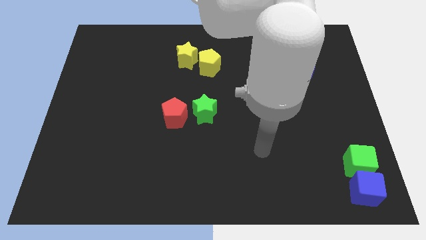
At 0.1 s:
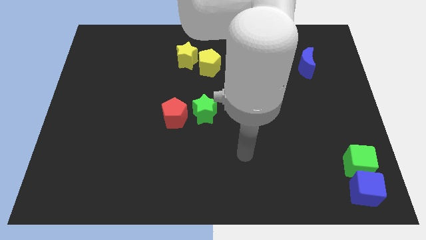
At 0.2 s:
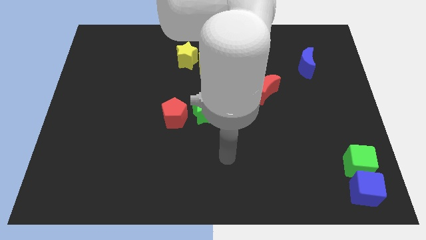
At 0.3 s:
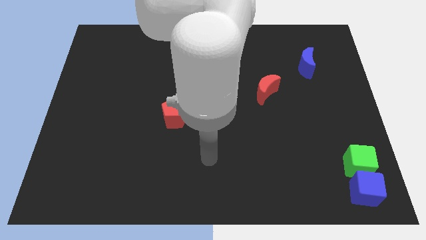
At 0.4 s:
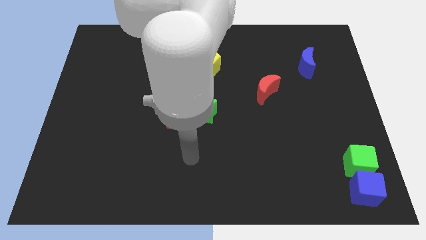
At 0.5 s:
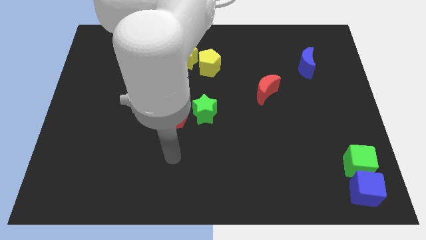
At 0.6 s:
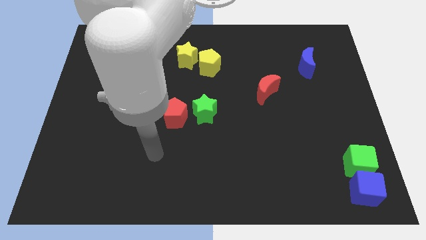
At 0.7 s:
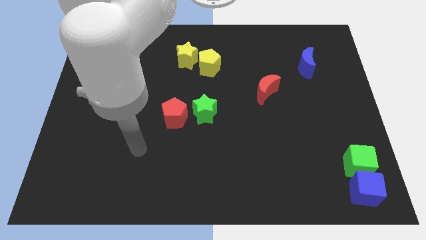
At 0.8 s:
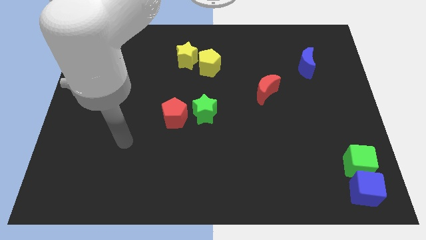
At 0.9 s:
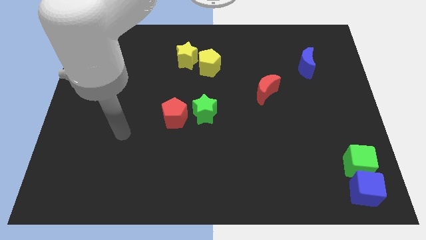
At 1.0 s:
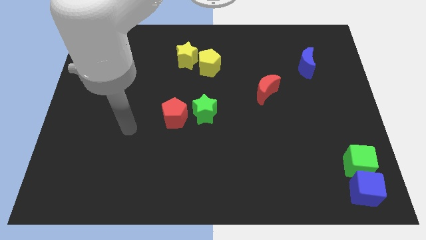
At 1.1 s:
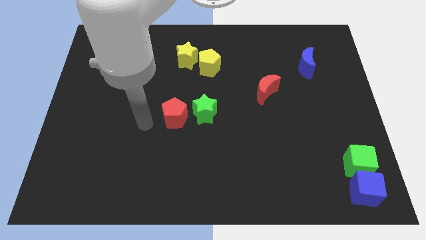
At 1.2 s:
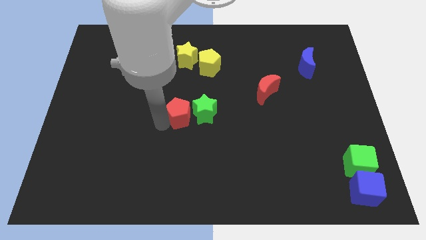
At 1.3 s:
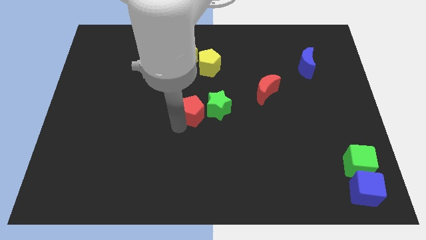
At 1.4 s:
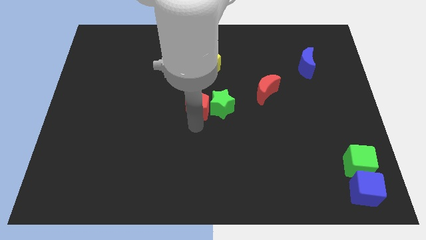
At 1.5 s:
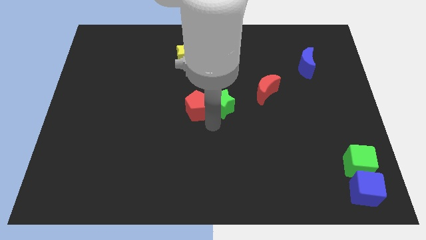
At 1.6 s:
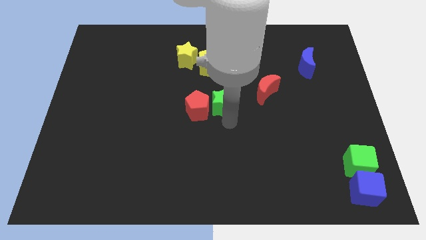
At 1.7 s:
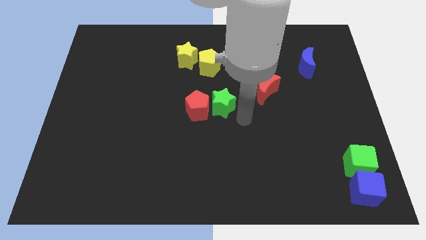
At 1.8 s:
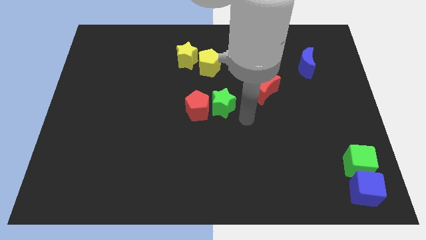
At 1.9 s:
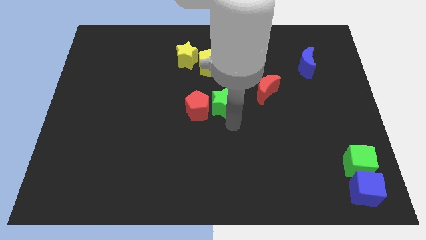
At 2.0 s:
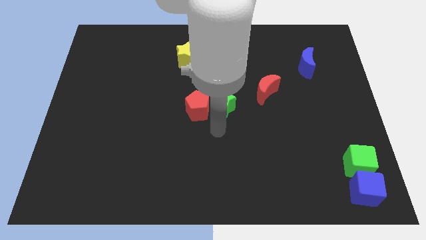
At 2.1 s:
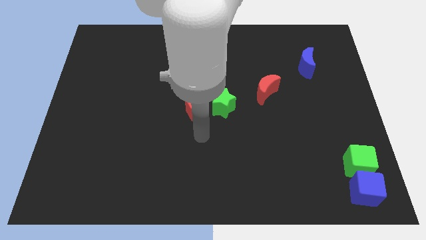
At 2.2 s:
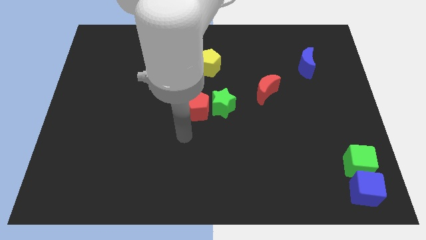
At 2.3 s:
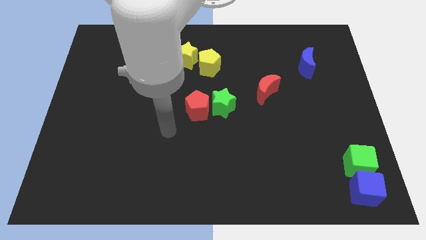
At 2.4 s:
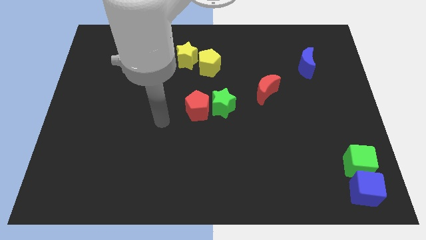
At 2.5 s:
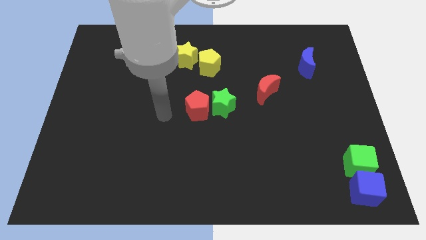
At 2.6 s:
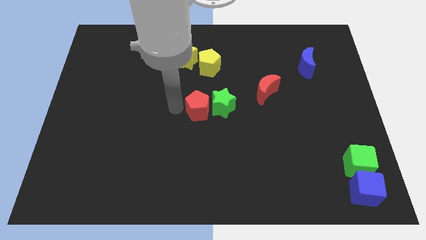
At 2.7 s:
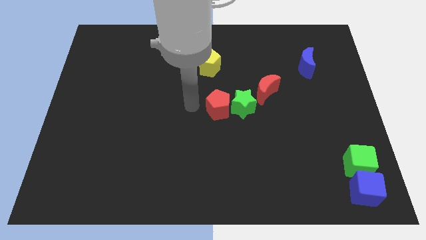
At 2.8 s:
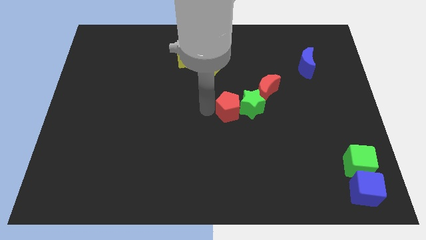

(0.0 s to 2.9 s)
push the red pentagon along with the green star towards the right side of the board

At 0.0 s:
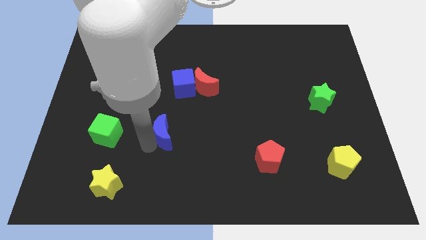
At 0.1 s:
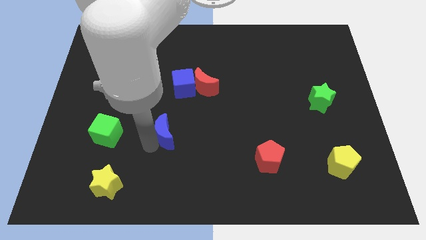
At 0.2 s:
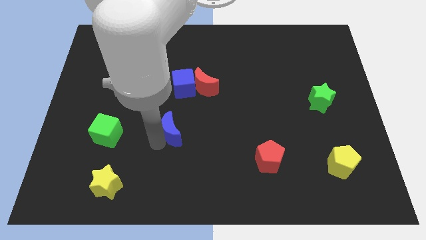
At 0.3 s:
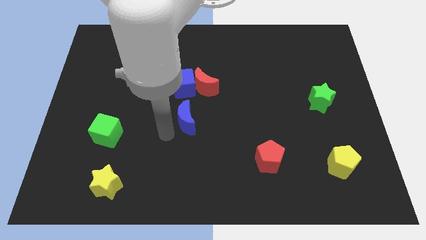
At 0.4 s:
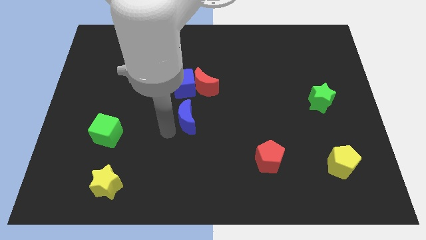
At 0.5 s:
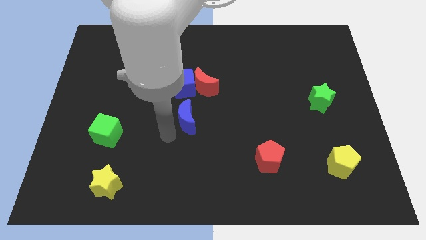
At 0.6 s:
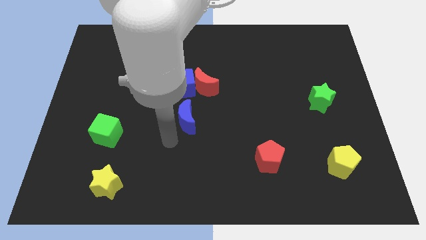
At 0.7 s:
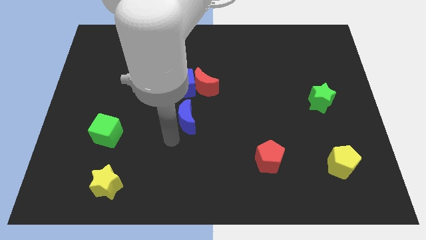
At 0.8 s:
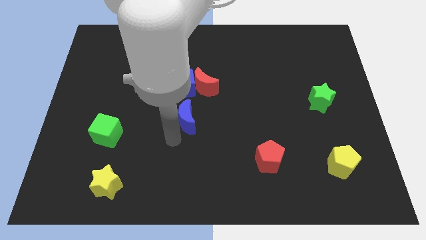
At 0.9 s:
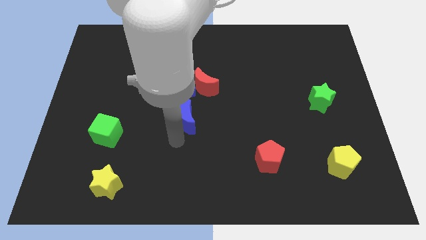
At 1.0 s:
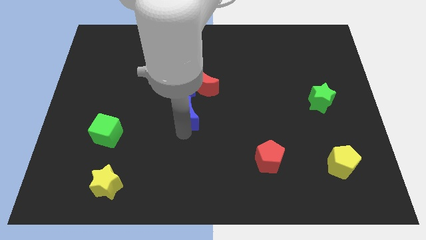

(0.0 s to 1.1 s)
push the blue crescent towards the center of the board

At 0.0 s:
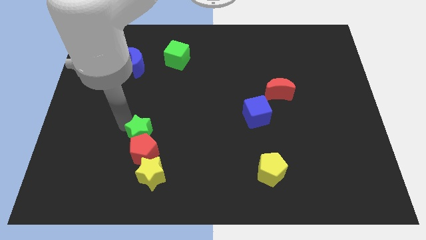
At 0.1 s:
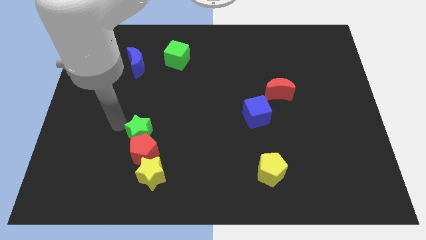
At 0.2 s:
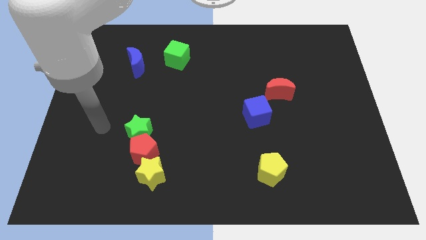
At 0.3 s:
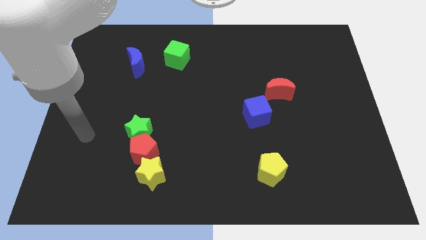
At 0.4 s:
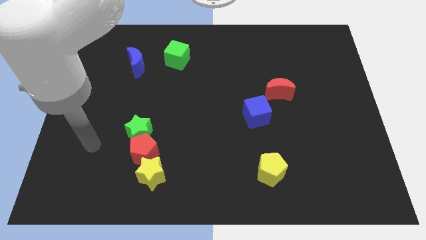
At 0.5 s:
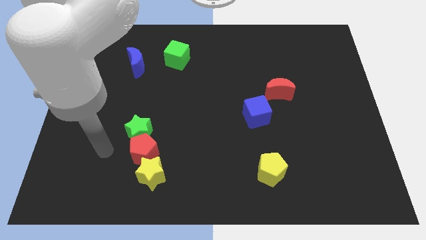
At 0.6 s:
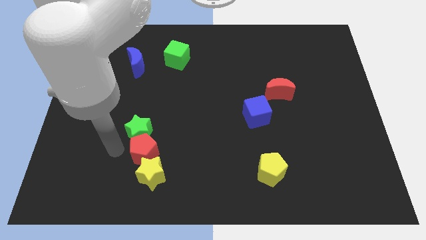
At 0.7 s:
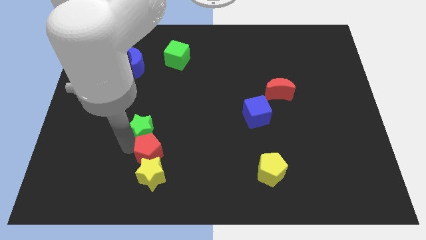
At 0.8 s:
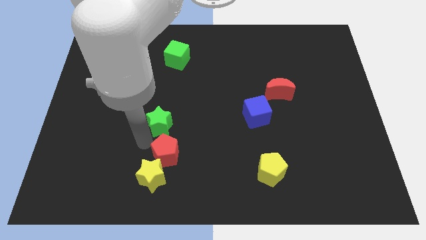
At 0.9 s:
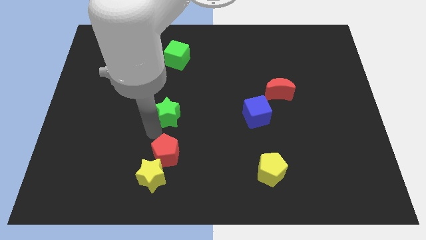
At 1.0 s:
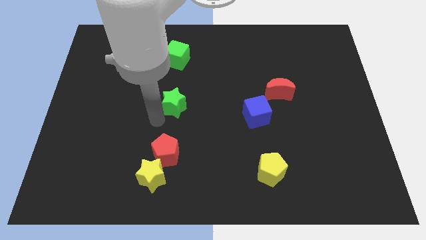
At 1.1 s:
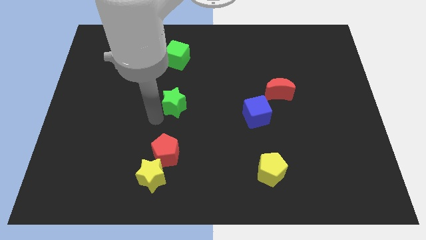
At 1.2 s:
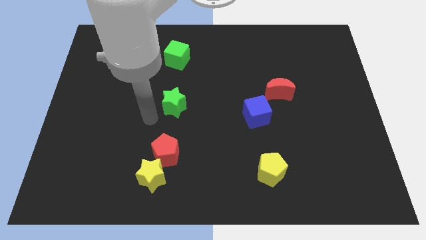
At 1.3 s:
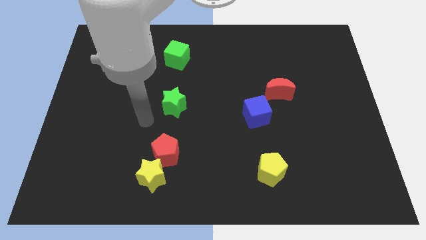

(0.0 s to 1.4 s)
separate green star and red pentagon

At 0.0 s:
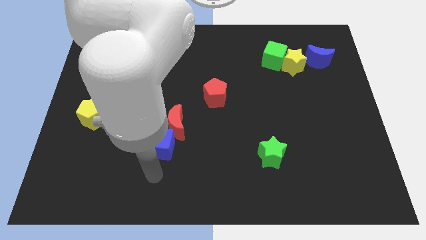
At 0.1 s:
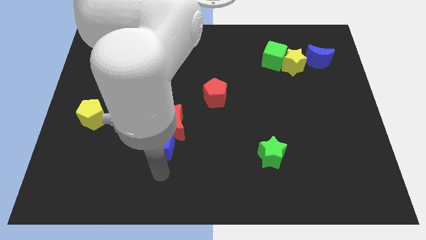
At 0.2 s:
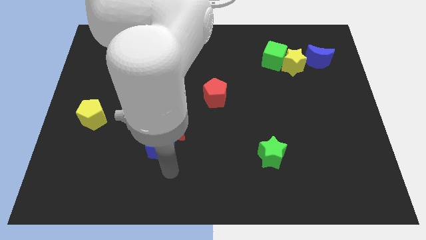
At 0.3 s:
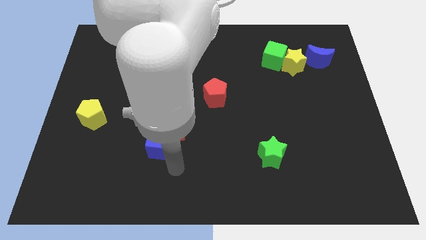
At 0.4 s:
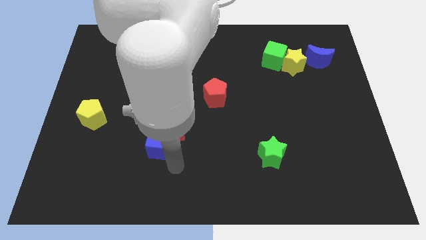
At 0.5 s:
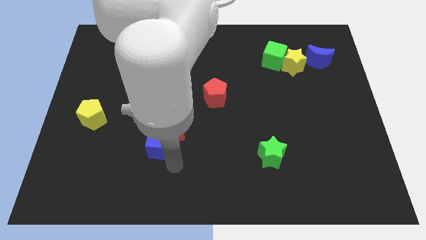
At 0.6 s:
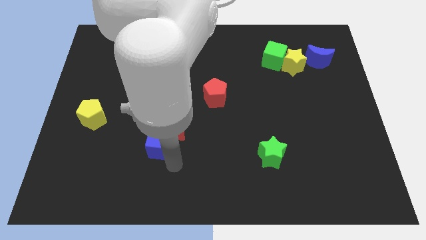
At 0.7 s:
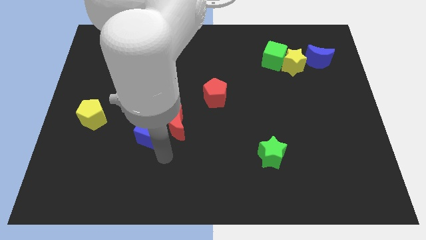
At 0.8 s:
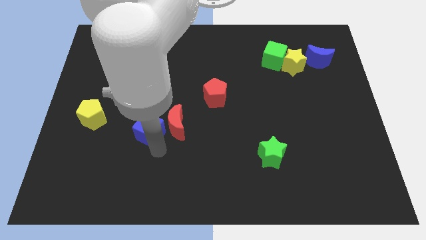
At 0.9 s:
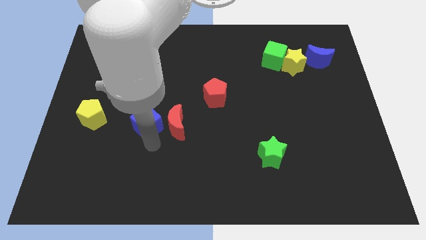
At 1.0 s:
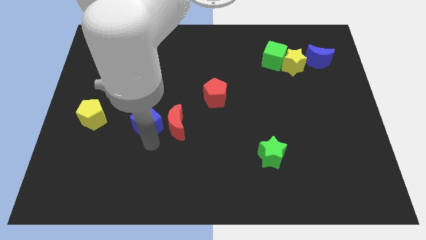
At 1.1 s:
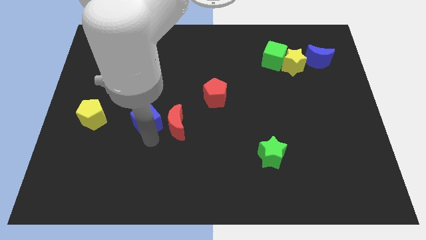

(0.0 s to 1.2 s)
push blue cube in between red moon and yellow pentagon

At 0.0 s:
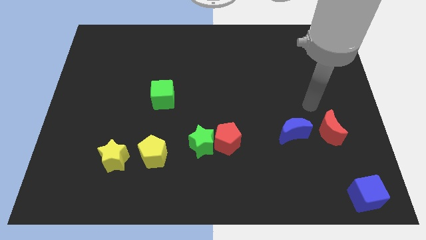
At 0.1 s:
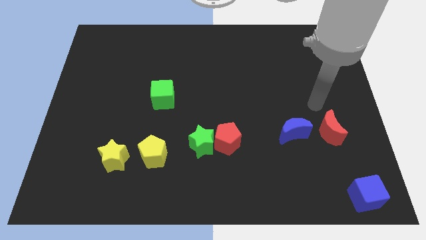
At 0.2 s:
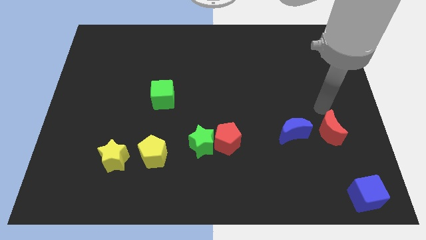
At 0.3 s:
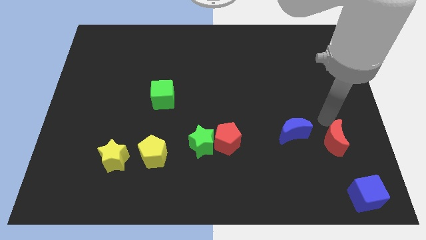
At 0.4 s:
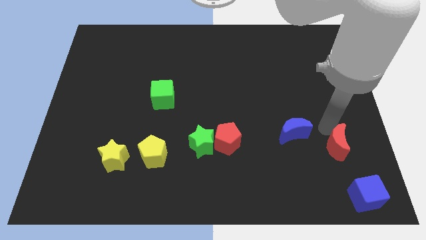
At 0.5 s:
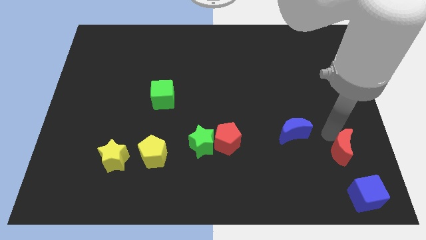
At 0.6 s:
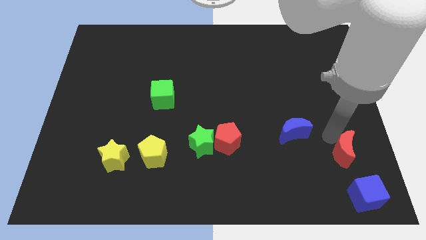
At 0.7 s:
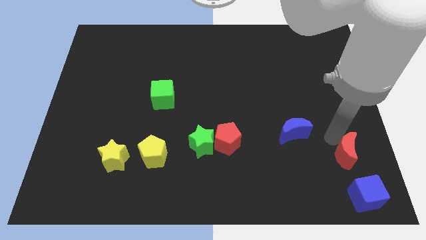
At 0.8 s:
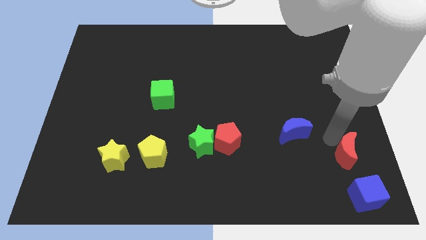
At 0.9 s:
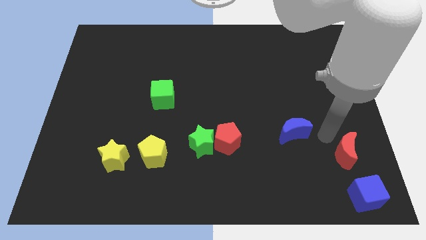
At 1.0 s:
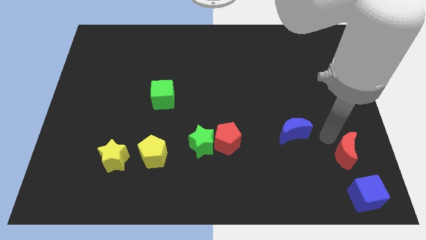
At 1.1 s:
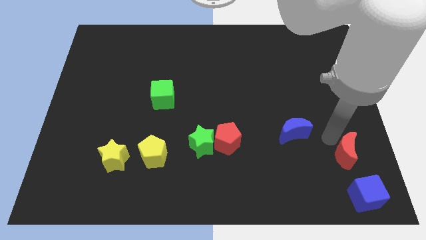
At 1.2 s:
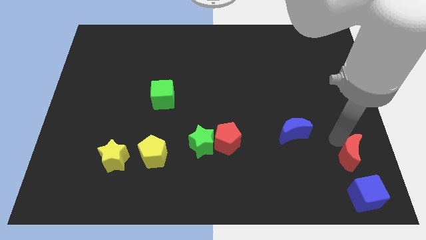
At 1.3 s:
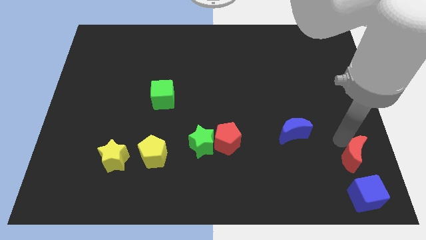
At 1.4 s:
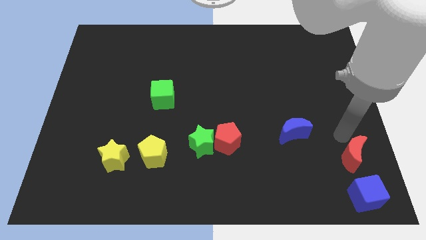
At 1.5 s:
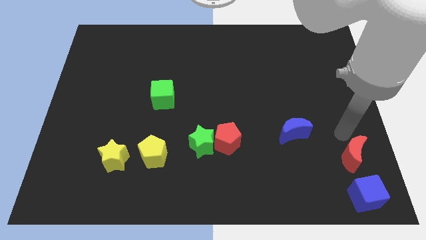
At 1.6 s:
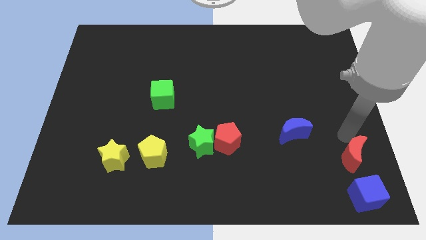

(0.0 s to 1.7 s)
push the red crescent to the top of the blue cube

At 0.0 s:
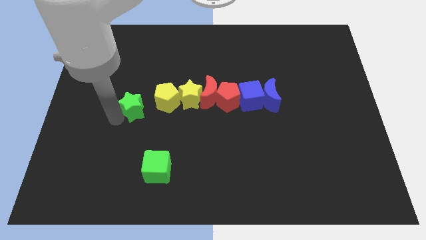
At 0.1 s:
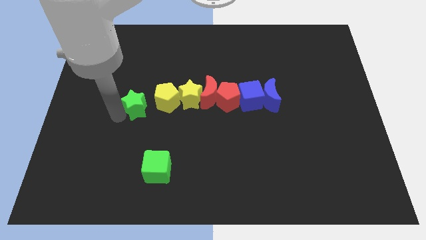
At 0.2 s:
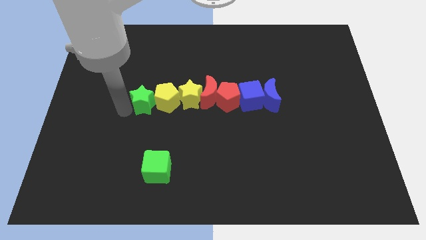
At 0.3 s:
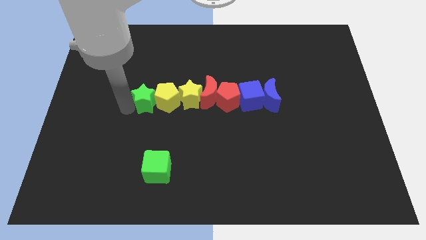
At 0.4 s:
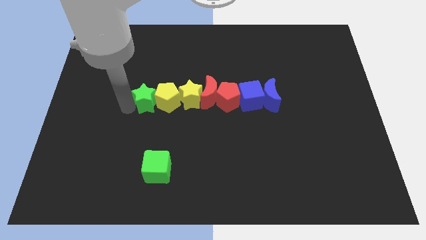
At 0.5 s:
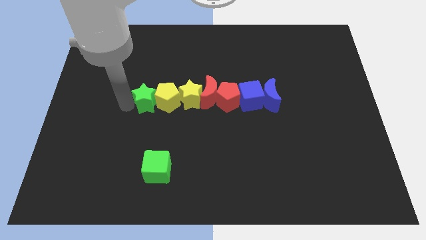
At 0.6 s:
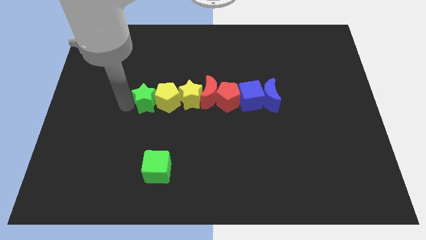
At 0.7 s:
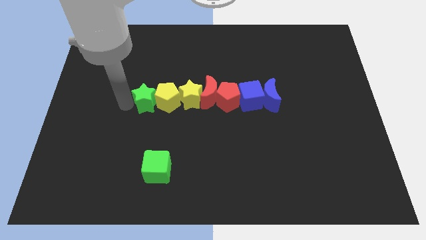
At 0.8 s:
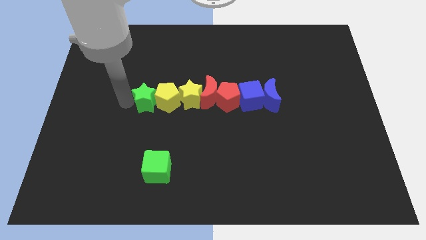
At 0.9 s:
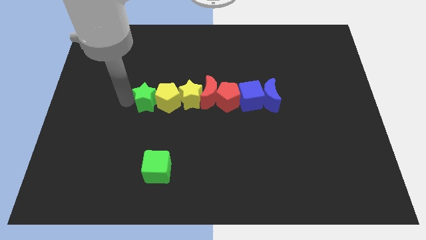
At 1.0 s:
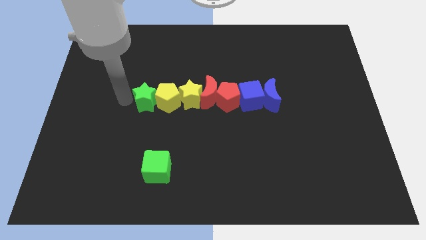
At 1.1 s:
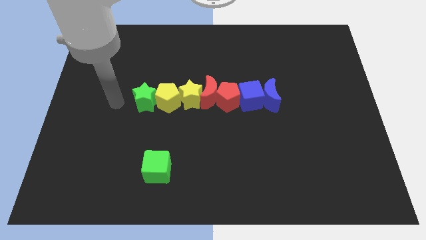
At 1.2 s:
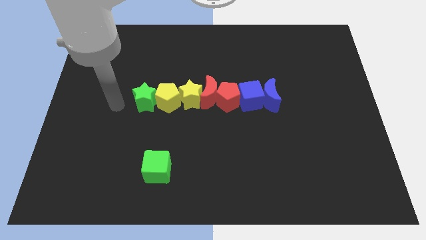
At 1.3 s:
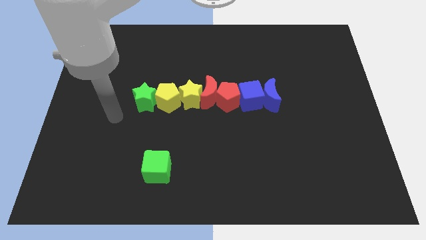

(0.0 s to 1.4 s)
move the green star into the yellow pentagon
